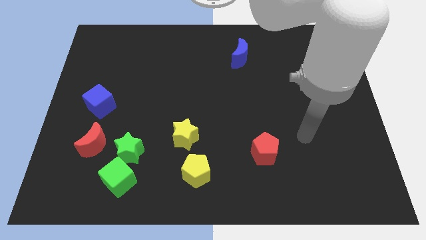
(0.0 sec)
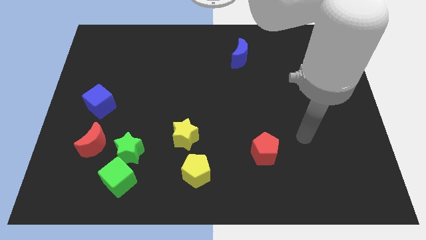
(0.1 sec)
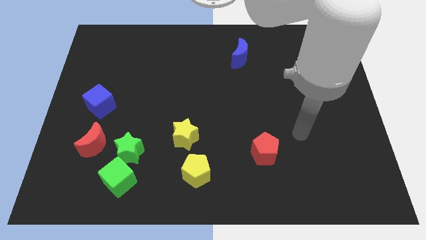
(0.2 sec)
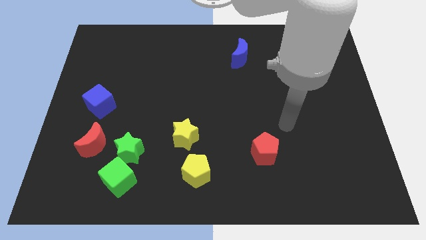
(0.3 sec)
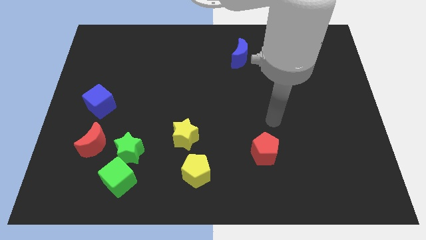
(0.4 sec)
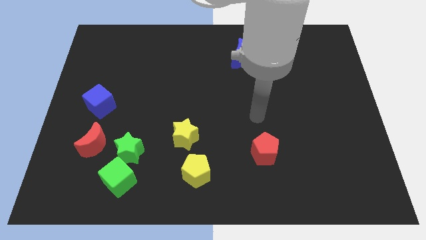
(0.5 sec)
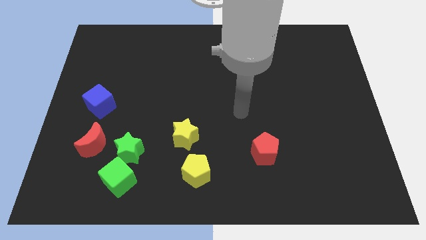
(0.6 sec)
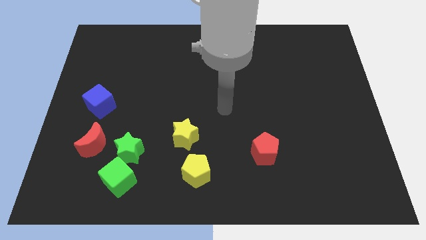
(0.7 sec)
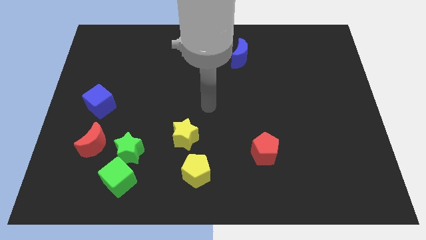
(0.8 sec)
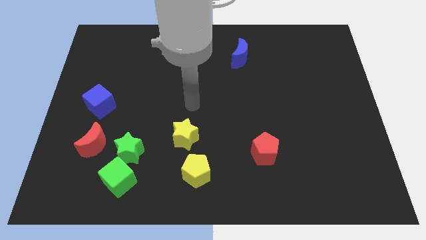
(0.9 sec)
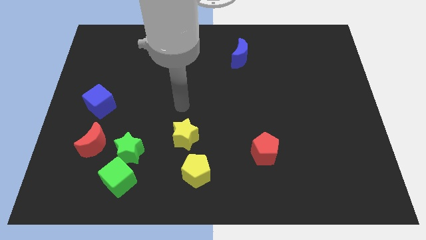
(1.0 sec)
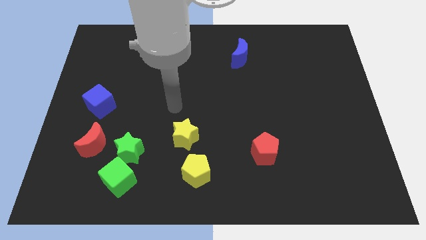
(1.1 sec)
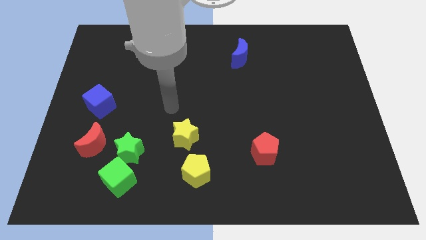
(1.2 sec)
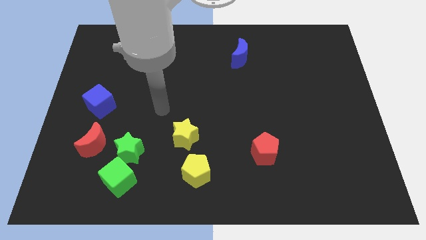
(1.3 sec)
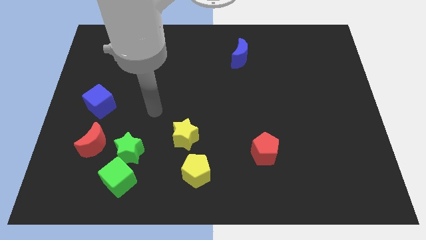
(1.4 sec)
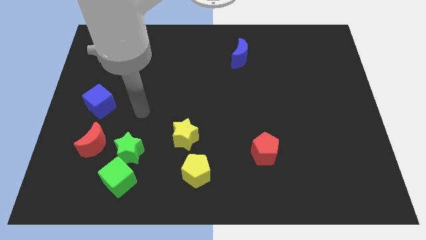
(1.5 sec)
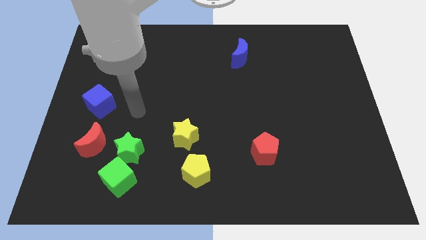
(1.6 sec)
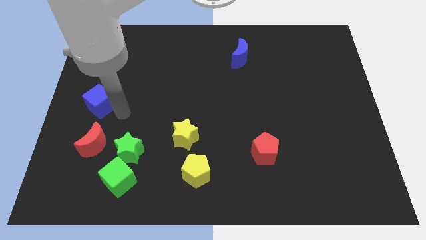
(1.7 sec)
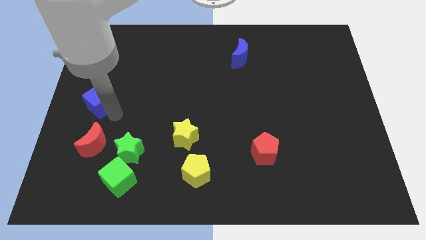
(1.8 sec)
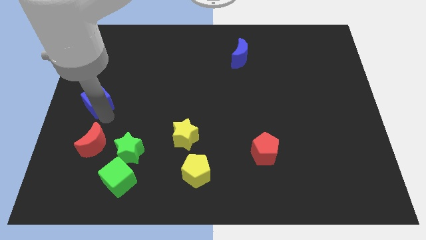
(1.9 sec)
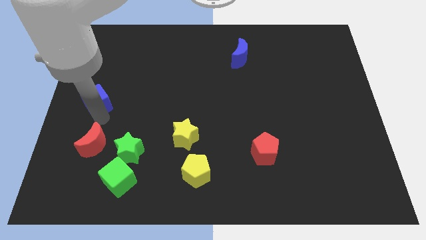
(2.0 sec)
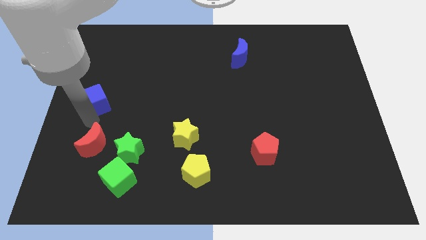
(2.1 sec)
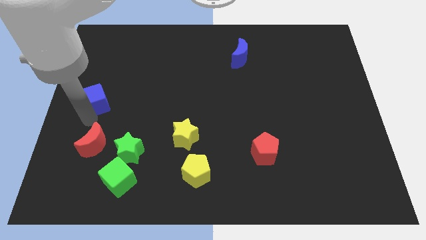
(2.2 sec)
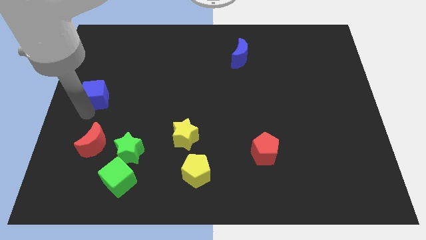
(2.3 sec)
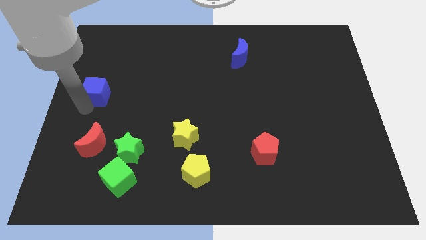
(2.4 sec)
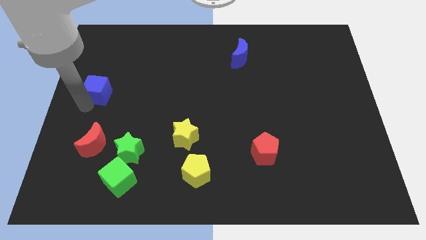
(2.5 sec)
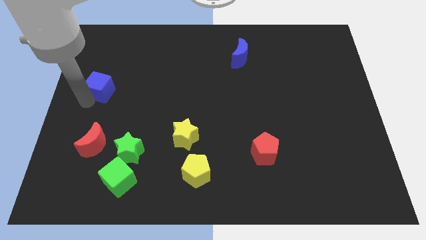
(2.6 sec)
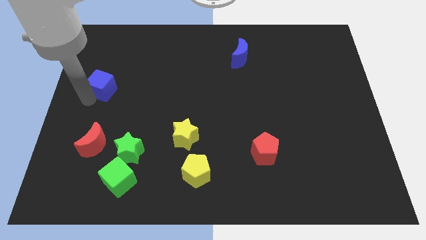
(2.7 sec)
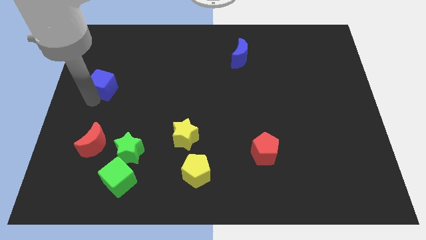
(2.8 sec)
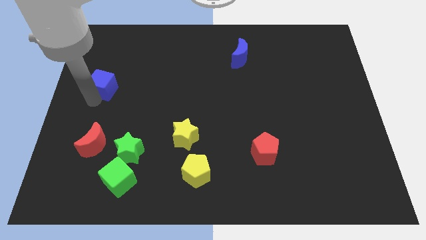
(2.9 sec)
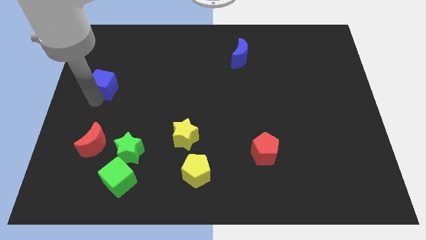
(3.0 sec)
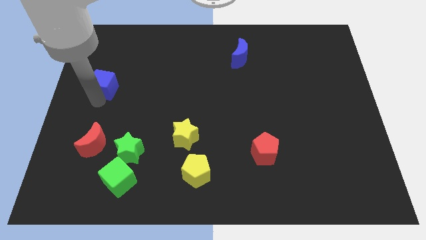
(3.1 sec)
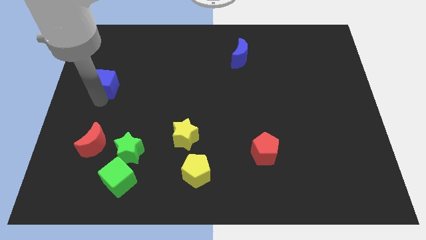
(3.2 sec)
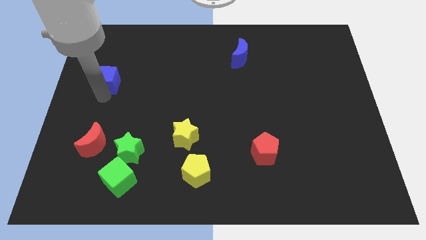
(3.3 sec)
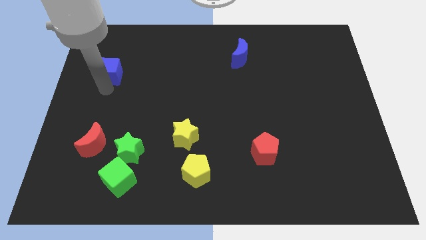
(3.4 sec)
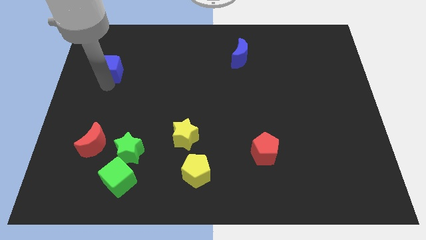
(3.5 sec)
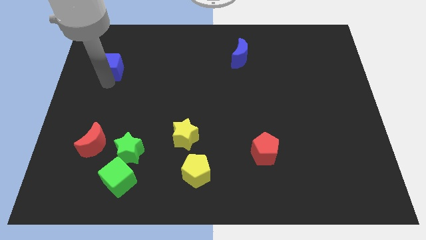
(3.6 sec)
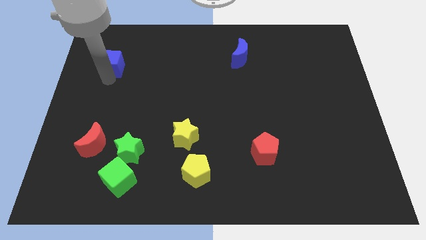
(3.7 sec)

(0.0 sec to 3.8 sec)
move the blue cube vertically to the top side of the red crescent

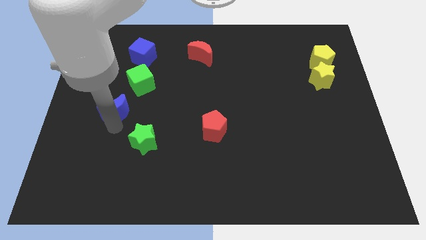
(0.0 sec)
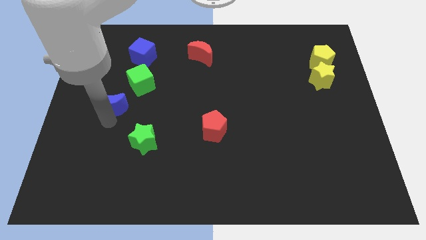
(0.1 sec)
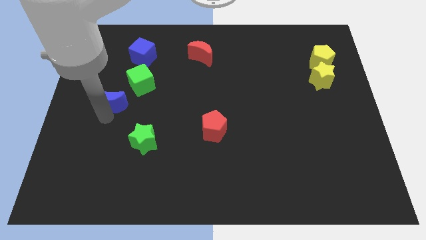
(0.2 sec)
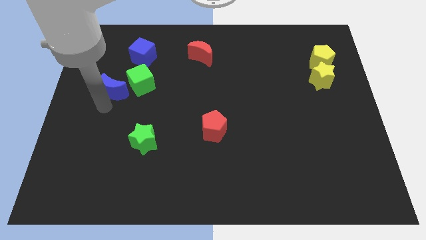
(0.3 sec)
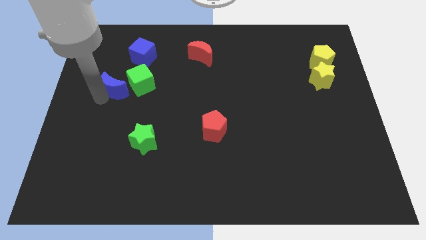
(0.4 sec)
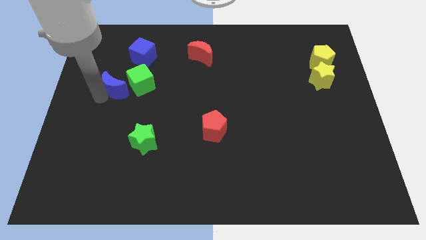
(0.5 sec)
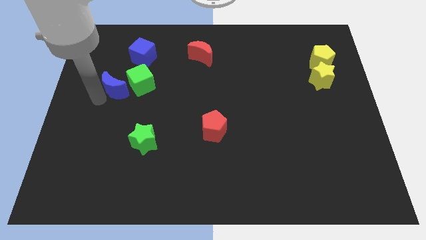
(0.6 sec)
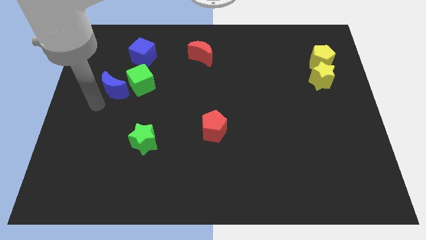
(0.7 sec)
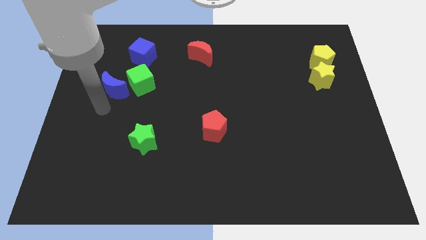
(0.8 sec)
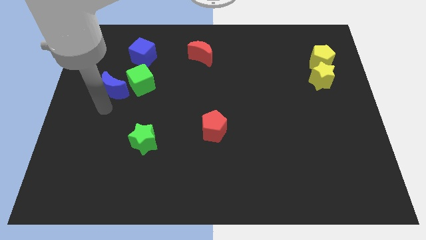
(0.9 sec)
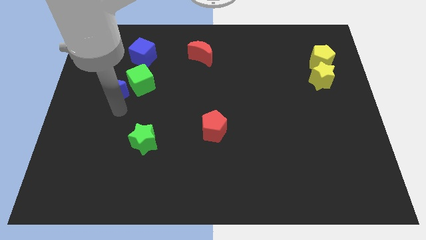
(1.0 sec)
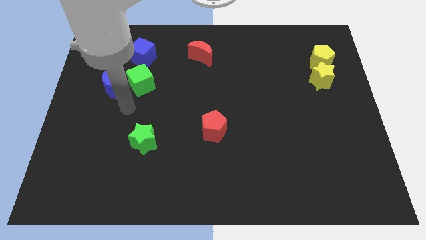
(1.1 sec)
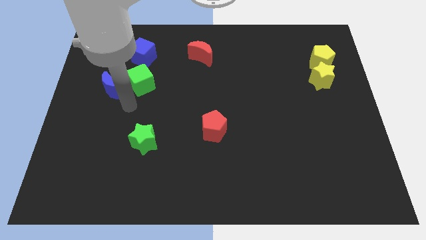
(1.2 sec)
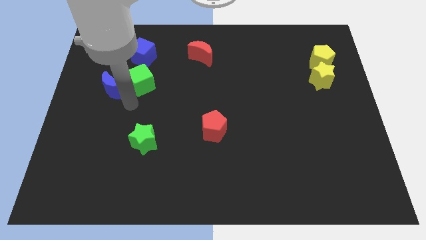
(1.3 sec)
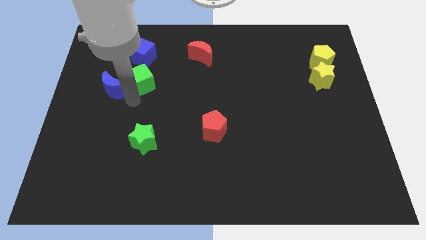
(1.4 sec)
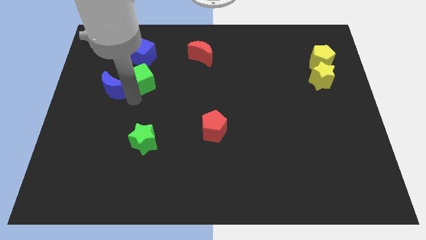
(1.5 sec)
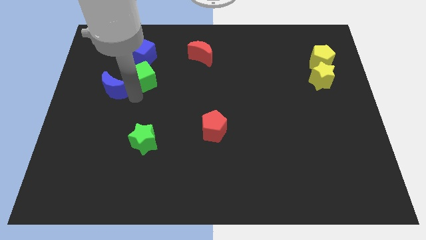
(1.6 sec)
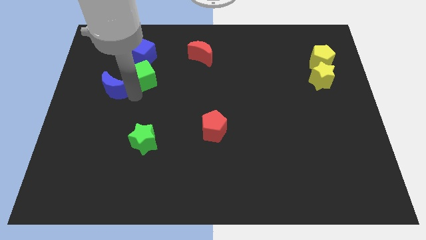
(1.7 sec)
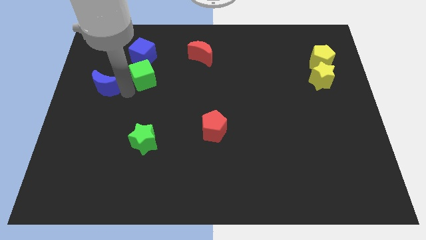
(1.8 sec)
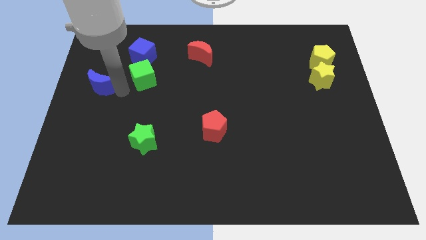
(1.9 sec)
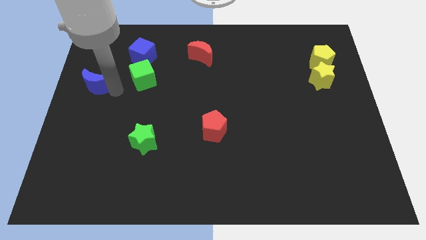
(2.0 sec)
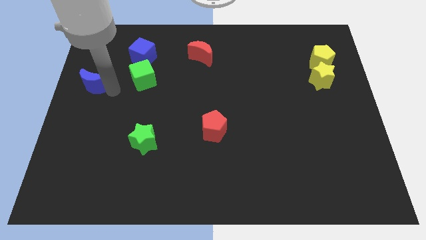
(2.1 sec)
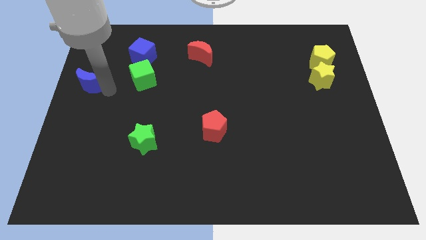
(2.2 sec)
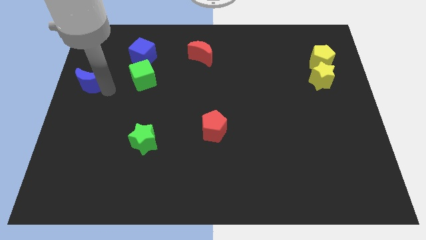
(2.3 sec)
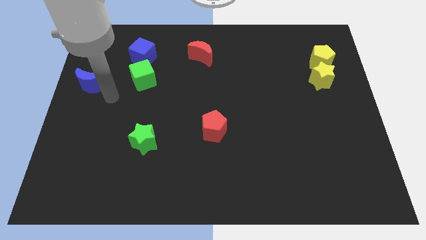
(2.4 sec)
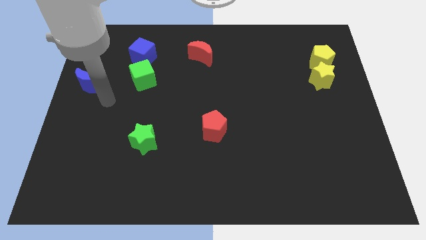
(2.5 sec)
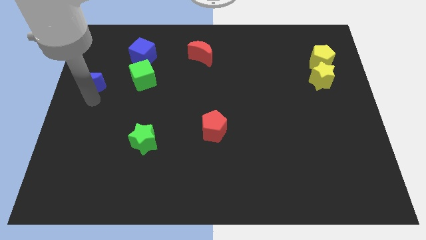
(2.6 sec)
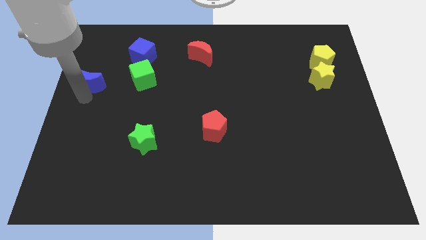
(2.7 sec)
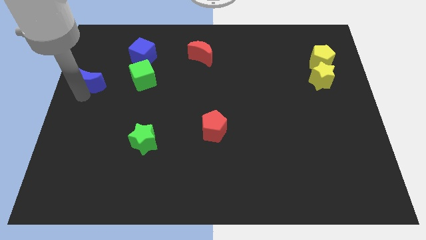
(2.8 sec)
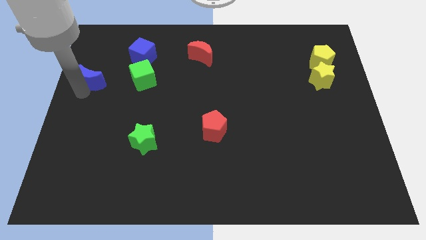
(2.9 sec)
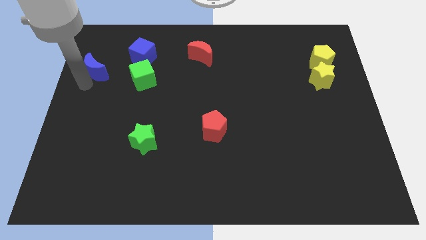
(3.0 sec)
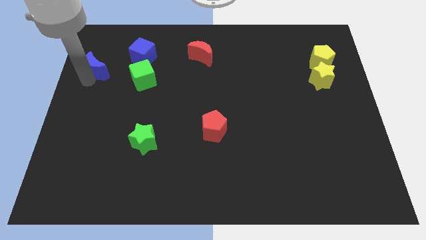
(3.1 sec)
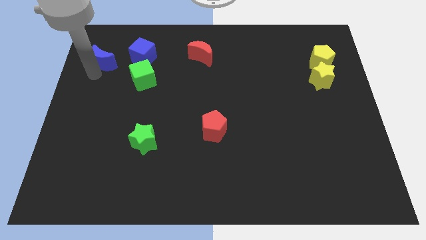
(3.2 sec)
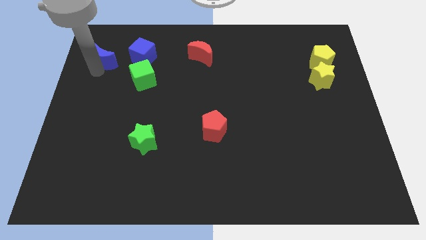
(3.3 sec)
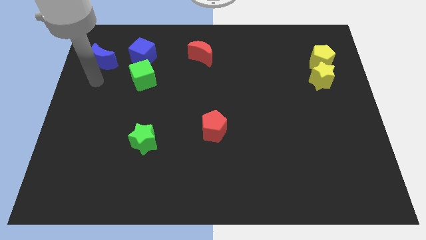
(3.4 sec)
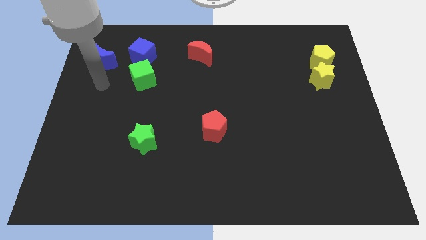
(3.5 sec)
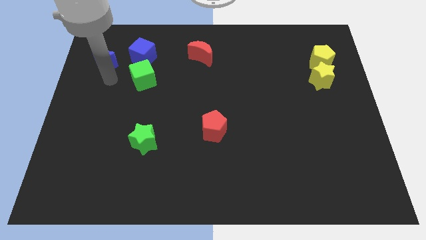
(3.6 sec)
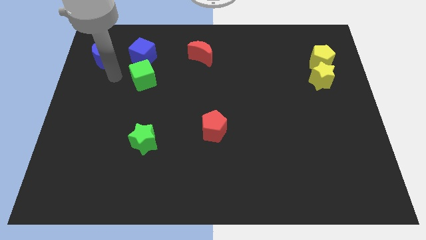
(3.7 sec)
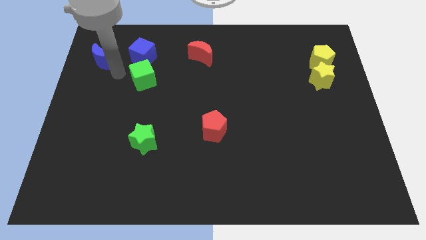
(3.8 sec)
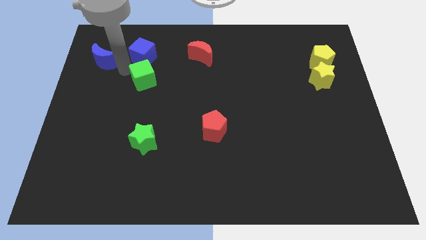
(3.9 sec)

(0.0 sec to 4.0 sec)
push the blue crescent towards the top left corner of the board

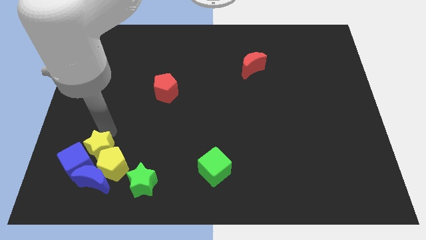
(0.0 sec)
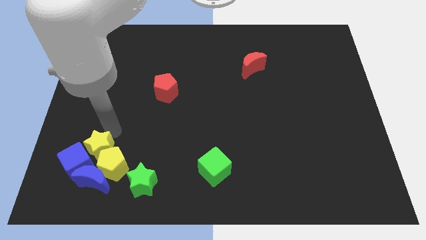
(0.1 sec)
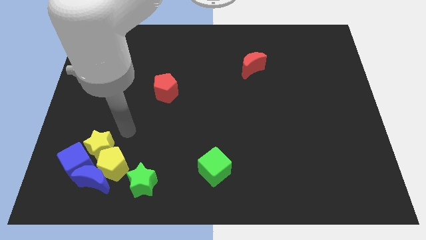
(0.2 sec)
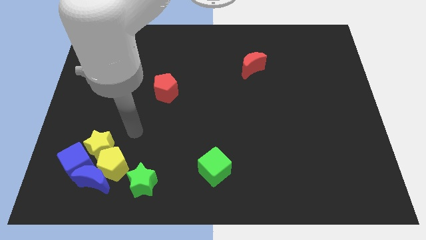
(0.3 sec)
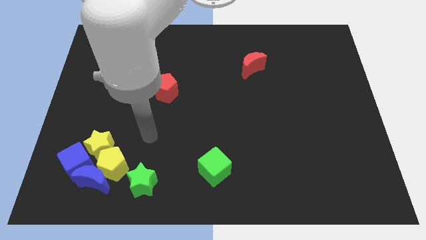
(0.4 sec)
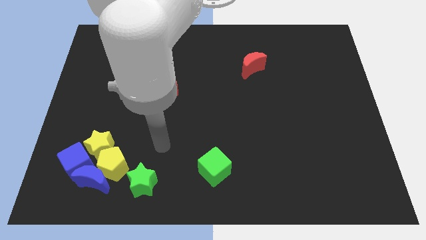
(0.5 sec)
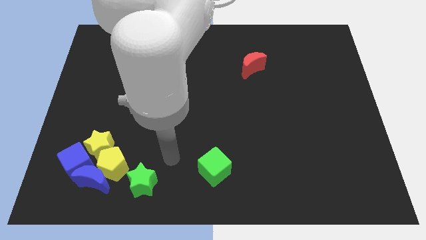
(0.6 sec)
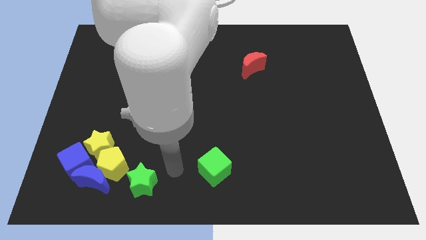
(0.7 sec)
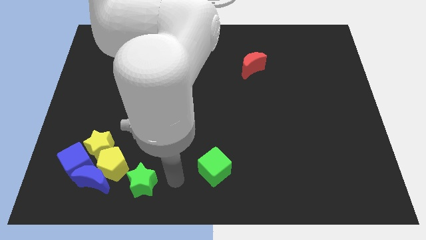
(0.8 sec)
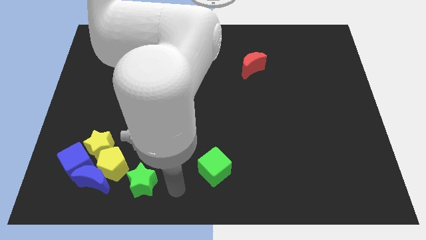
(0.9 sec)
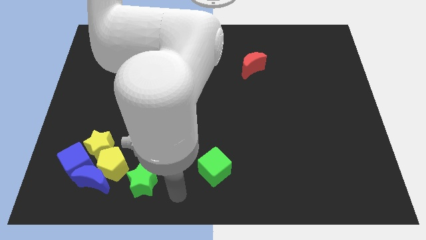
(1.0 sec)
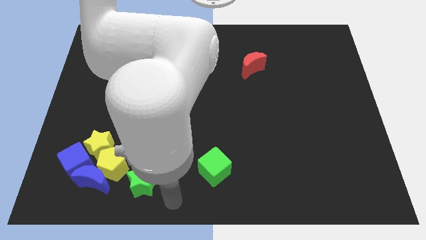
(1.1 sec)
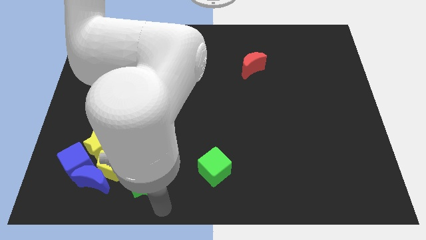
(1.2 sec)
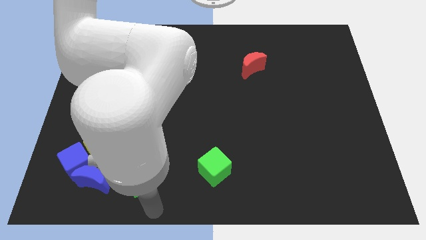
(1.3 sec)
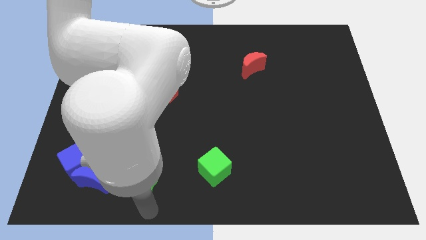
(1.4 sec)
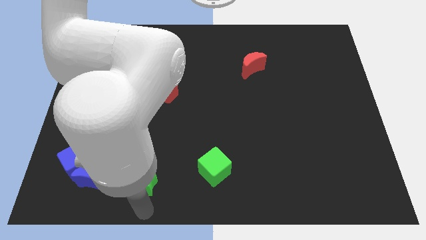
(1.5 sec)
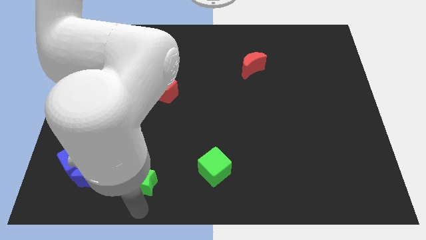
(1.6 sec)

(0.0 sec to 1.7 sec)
go and point your arm at the bottom side of the green star
